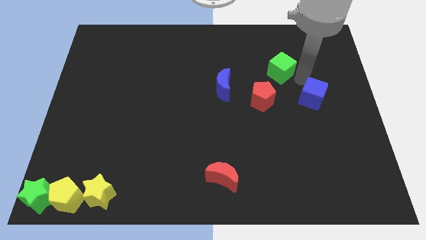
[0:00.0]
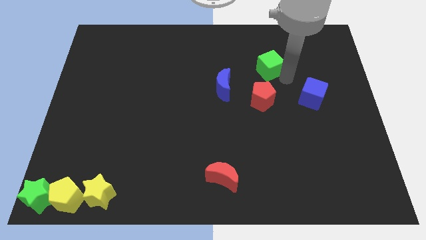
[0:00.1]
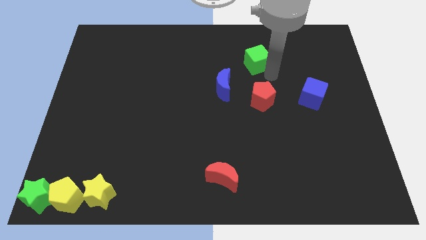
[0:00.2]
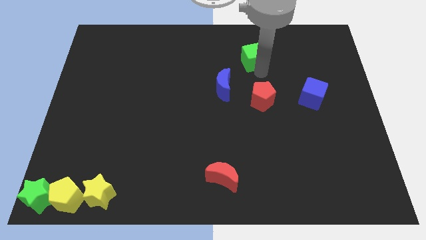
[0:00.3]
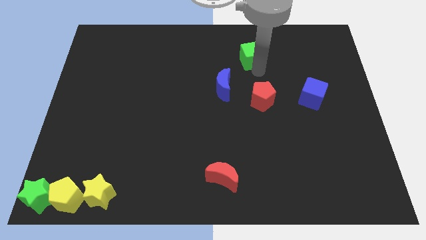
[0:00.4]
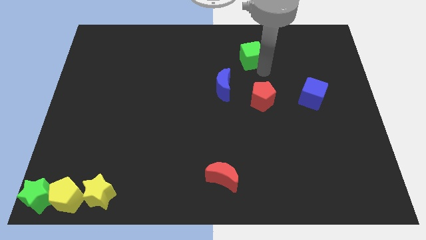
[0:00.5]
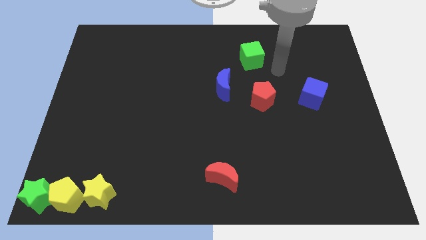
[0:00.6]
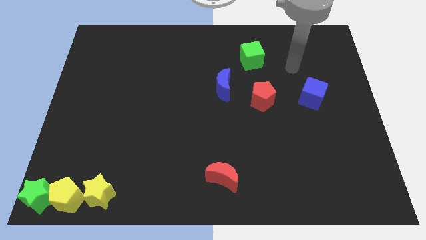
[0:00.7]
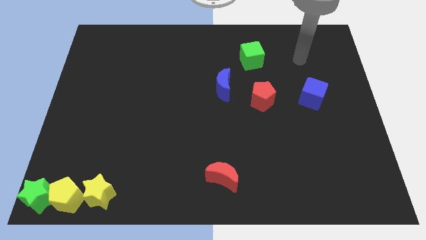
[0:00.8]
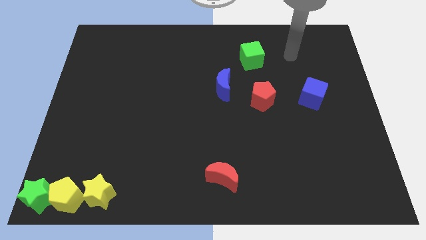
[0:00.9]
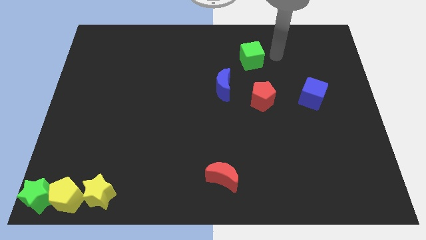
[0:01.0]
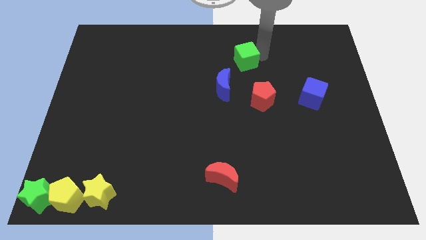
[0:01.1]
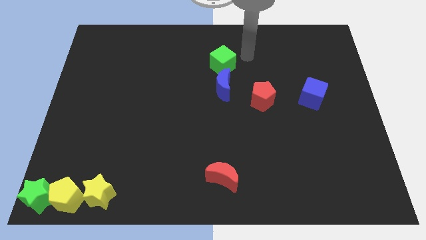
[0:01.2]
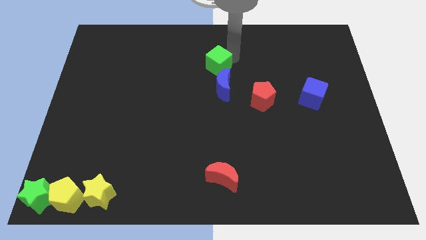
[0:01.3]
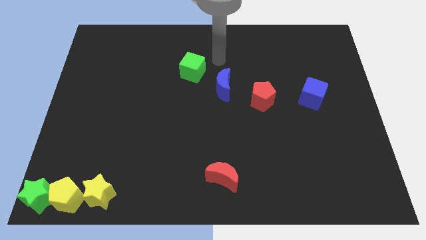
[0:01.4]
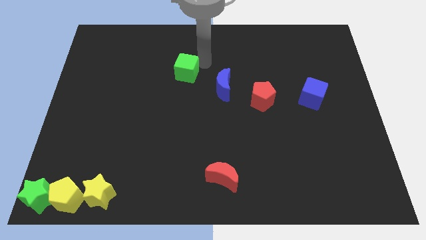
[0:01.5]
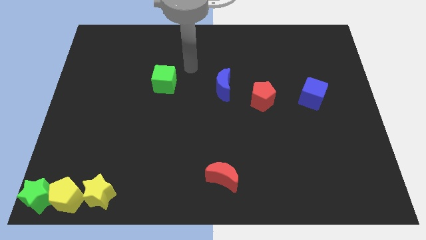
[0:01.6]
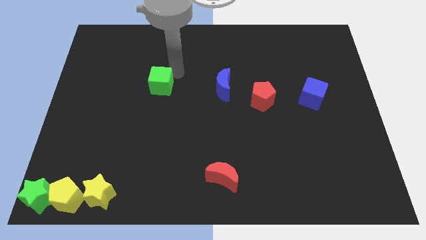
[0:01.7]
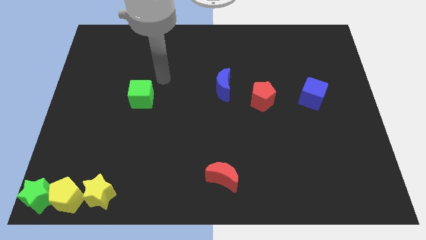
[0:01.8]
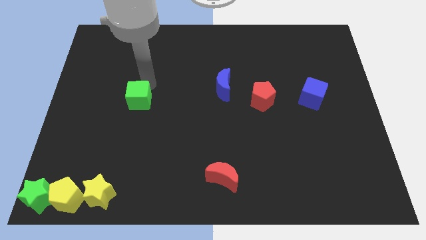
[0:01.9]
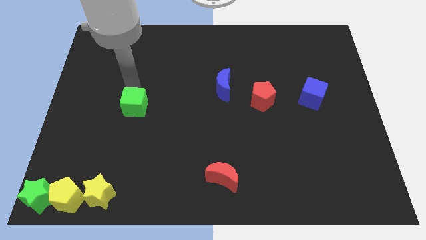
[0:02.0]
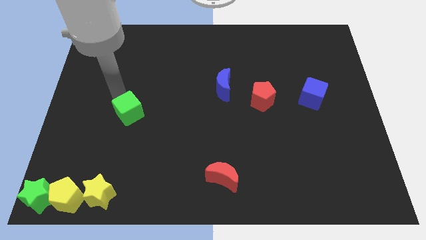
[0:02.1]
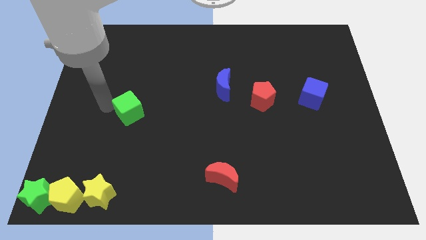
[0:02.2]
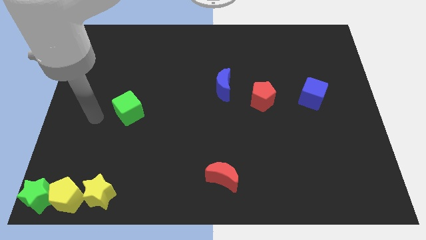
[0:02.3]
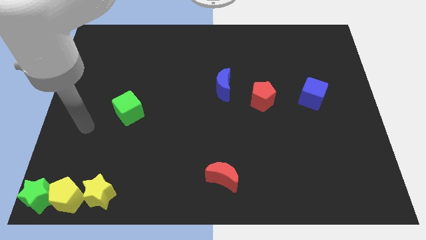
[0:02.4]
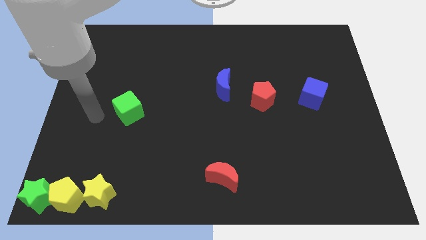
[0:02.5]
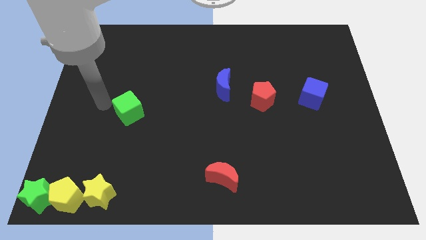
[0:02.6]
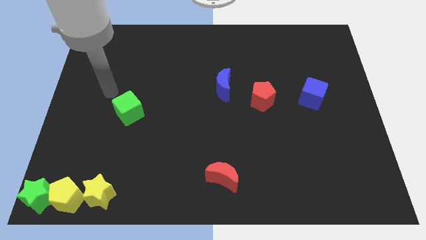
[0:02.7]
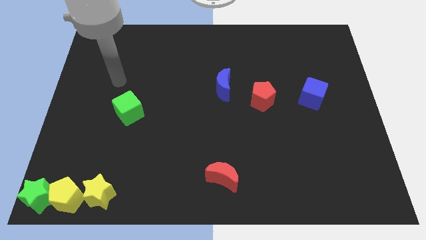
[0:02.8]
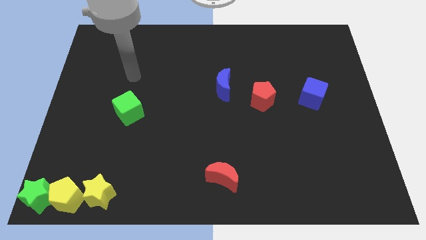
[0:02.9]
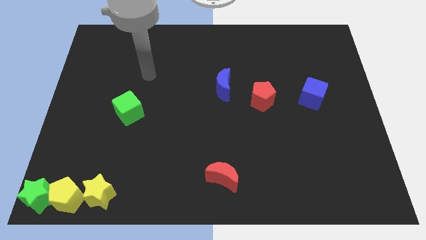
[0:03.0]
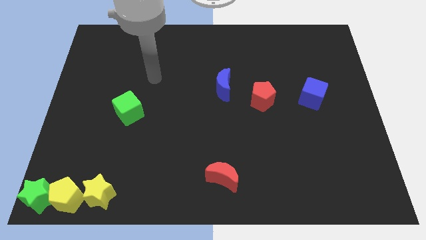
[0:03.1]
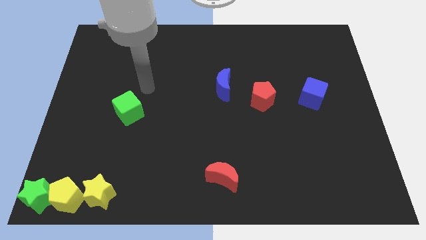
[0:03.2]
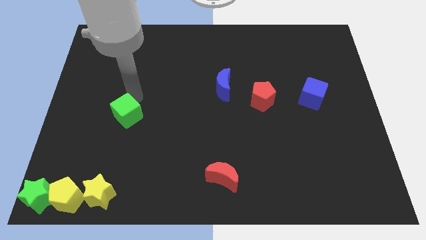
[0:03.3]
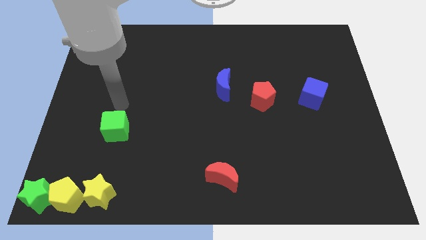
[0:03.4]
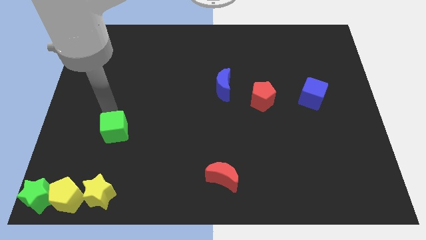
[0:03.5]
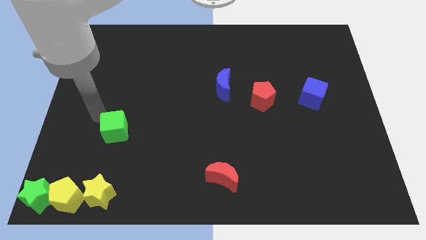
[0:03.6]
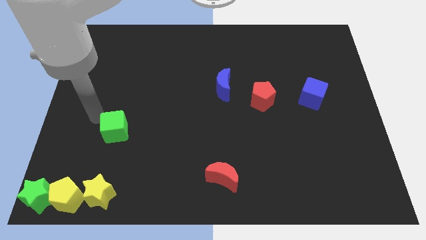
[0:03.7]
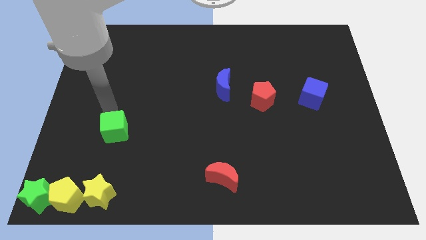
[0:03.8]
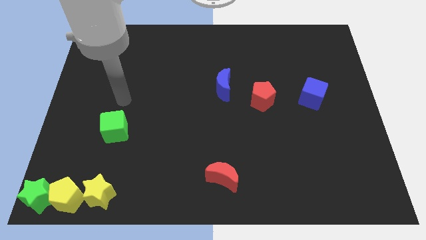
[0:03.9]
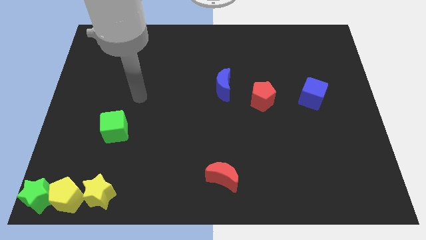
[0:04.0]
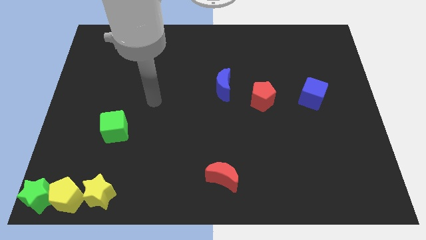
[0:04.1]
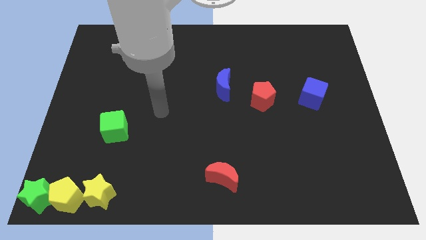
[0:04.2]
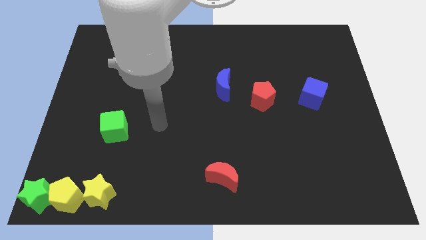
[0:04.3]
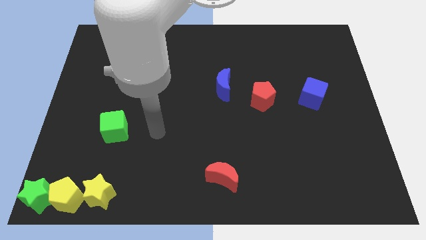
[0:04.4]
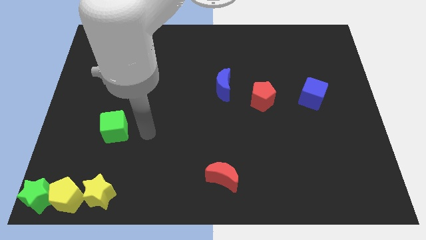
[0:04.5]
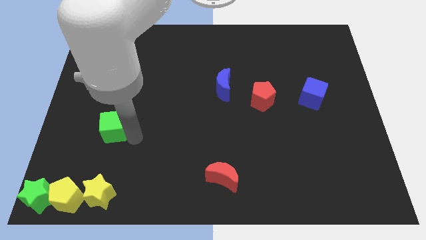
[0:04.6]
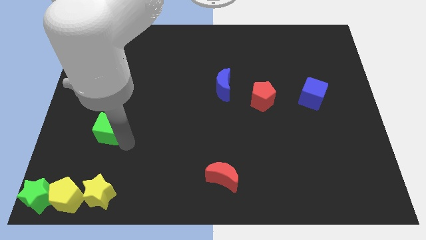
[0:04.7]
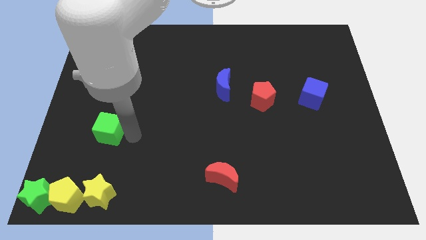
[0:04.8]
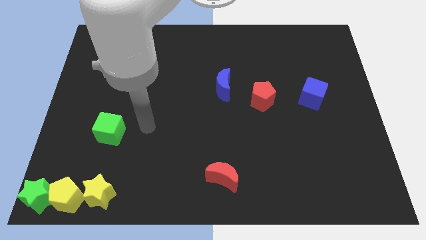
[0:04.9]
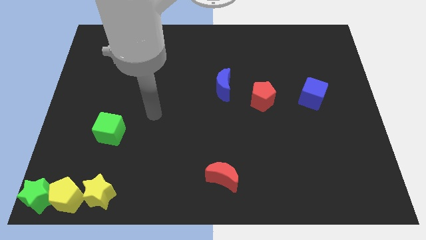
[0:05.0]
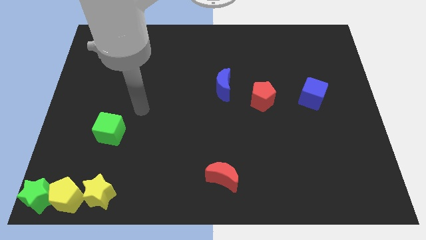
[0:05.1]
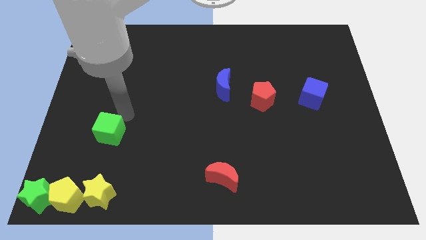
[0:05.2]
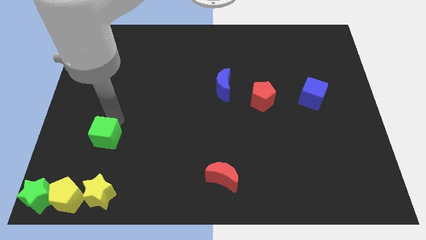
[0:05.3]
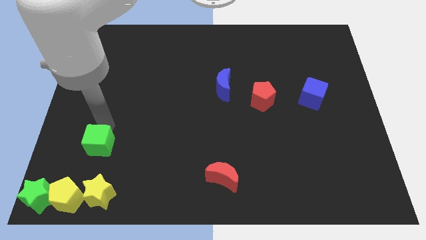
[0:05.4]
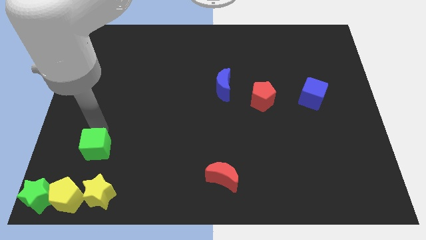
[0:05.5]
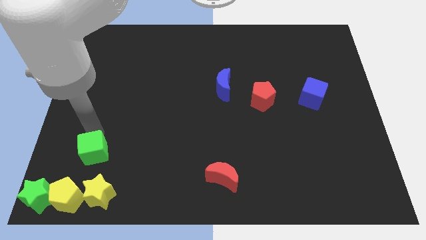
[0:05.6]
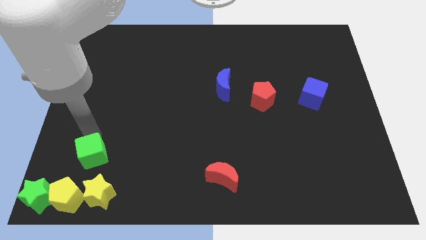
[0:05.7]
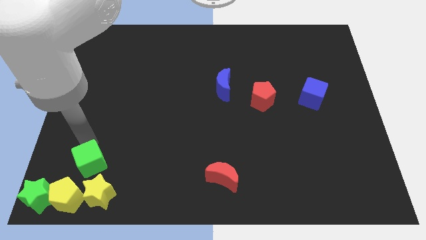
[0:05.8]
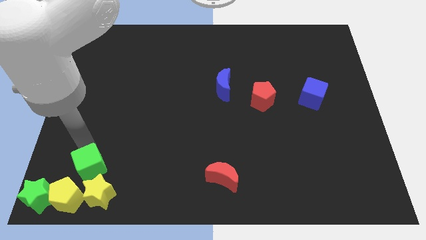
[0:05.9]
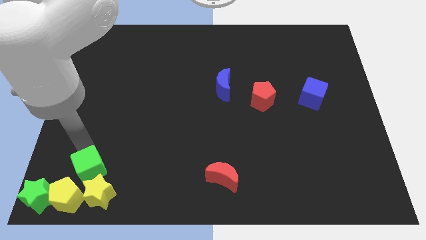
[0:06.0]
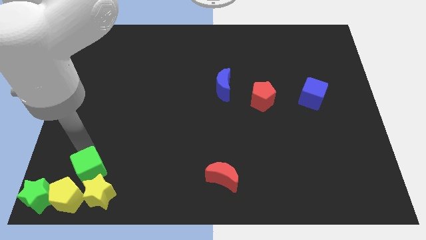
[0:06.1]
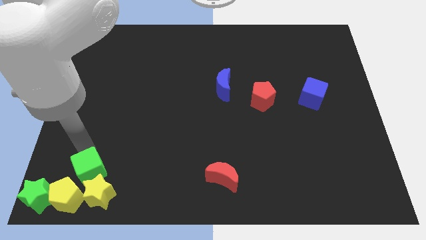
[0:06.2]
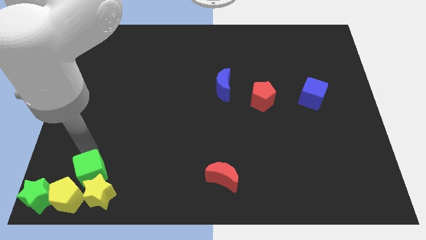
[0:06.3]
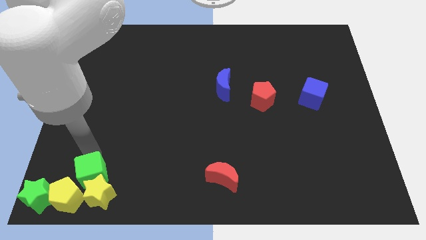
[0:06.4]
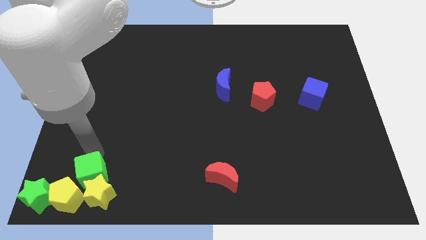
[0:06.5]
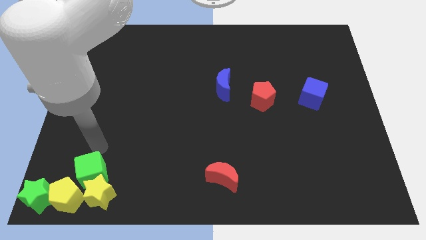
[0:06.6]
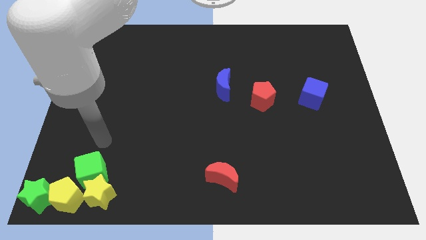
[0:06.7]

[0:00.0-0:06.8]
place the green cube to the top of the yellow star

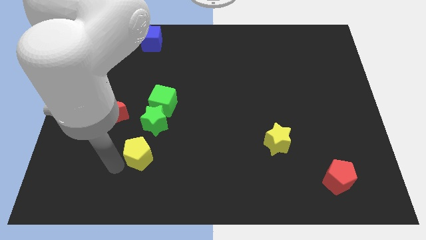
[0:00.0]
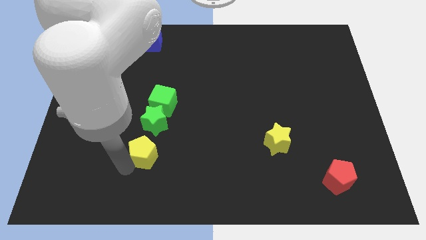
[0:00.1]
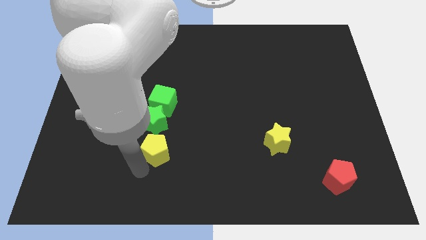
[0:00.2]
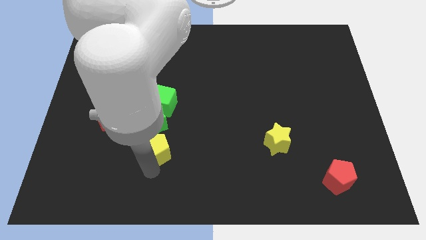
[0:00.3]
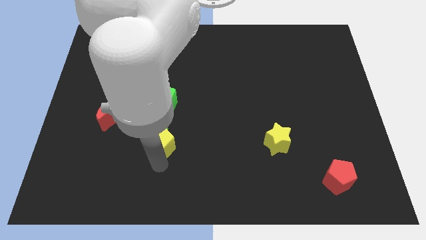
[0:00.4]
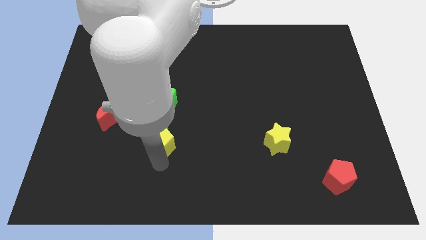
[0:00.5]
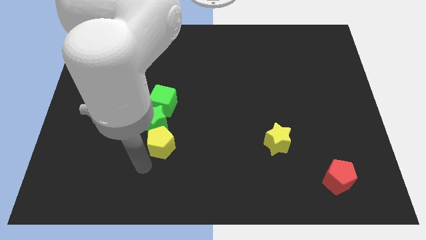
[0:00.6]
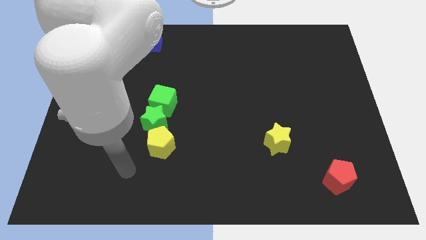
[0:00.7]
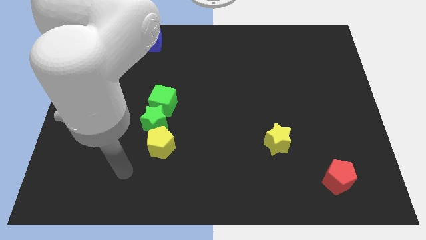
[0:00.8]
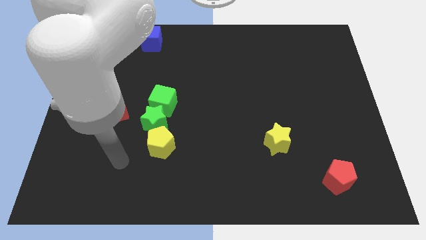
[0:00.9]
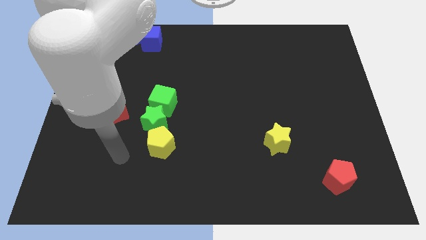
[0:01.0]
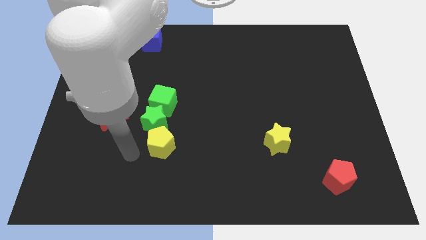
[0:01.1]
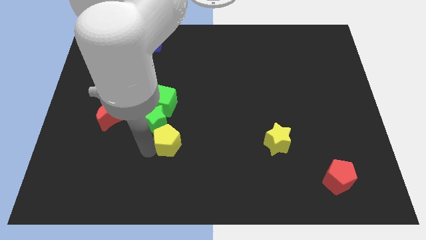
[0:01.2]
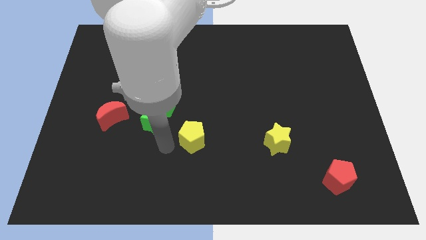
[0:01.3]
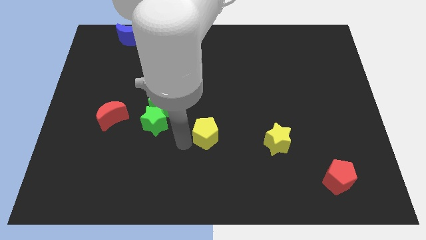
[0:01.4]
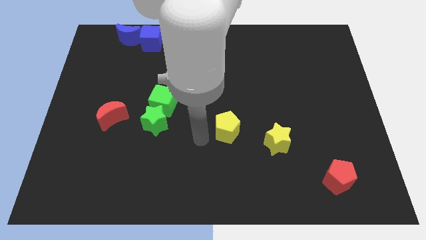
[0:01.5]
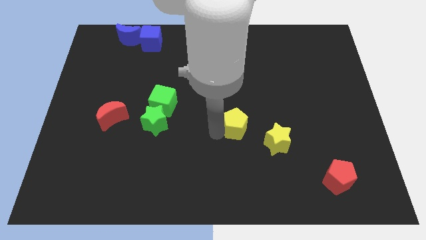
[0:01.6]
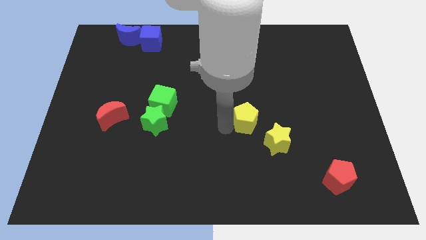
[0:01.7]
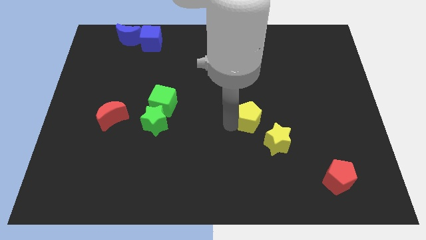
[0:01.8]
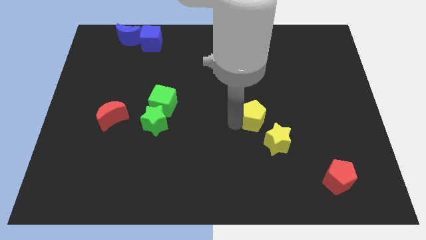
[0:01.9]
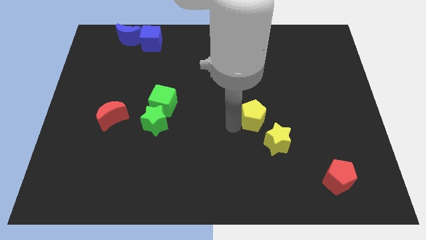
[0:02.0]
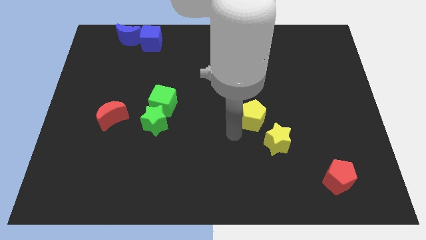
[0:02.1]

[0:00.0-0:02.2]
put the yellow pentagon horizontally right to the green star
